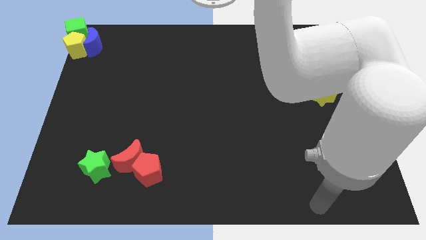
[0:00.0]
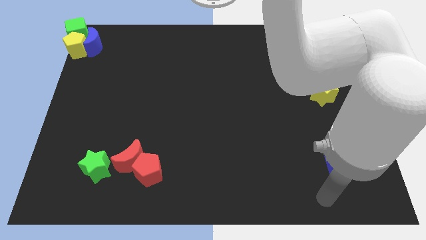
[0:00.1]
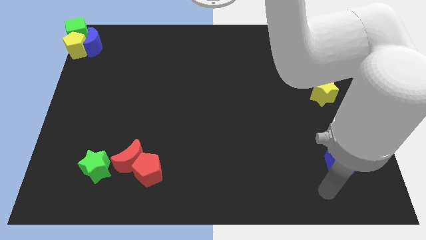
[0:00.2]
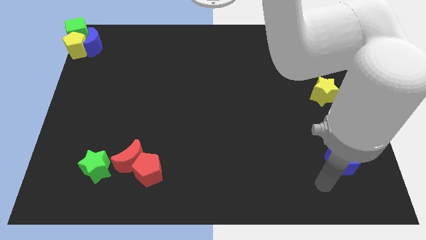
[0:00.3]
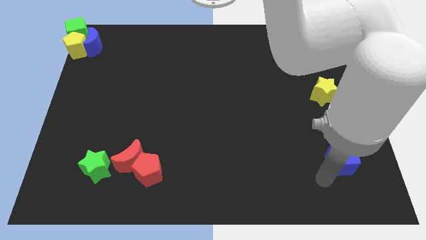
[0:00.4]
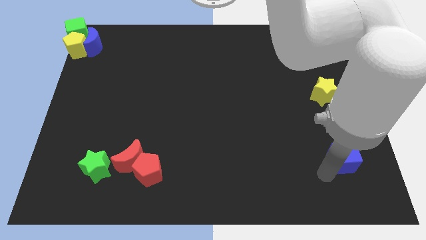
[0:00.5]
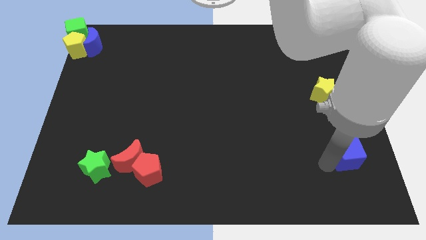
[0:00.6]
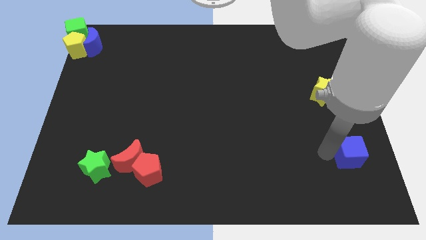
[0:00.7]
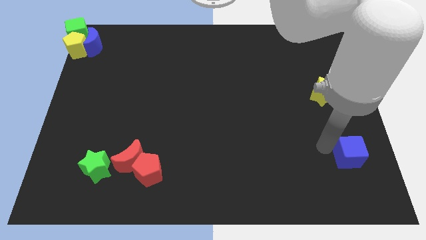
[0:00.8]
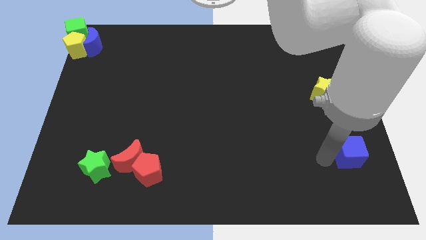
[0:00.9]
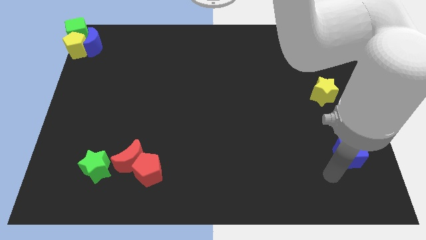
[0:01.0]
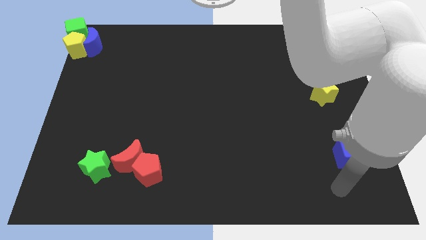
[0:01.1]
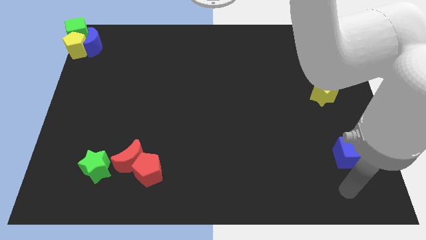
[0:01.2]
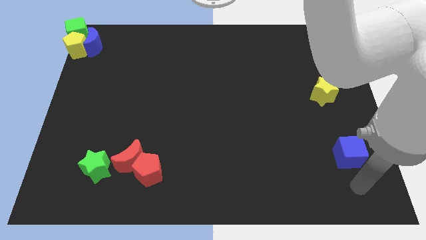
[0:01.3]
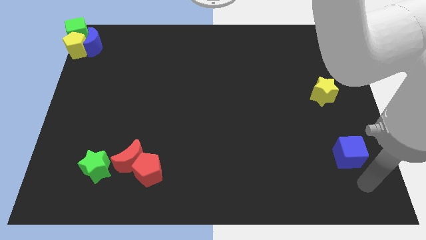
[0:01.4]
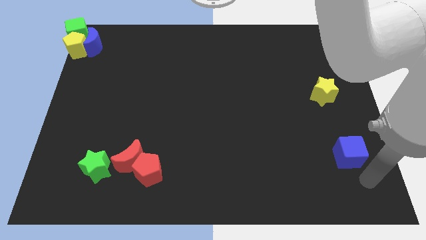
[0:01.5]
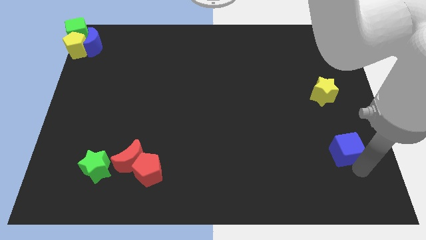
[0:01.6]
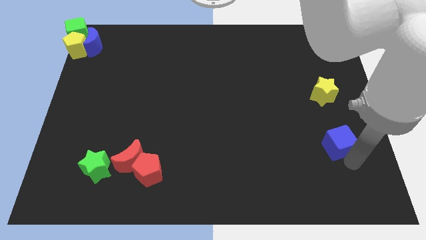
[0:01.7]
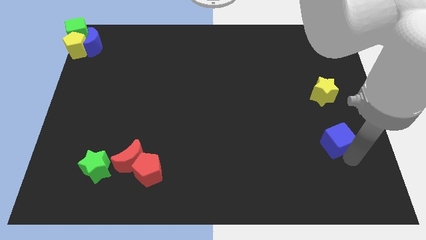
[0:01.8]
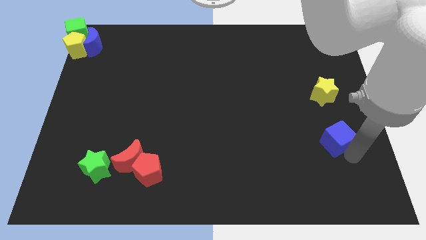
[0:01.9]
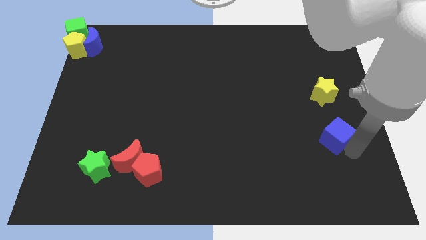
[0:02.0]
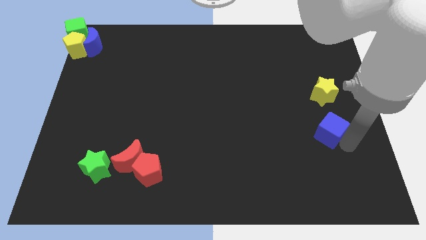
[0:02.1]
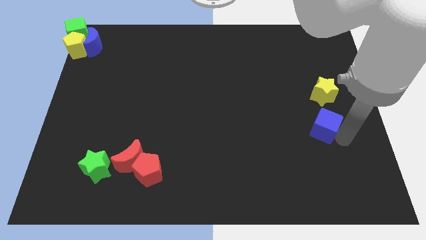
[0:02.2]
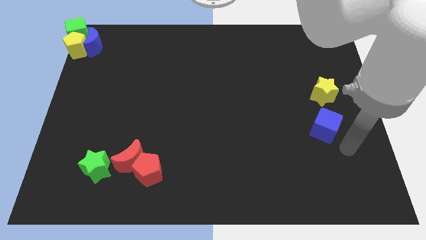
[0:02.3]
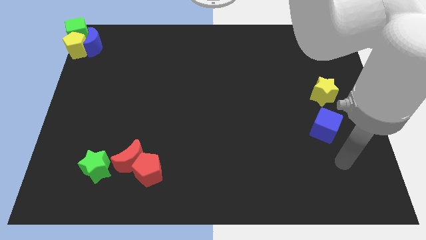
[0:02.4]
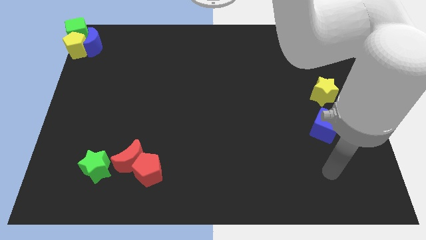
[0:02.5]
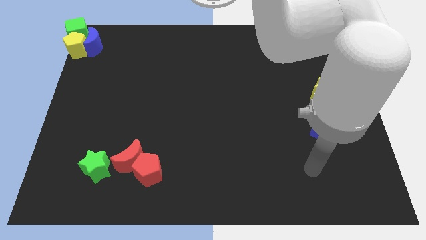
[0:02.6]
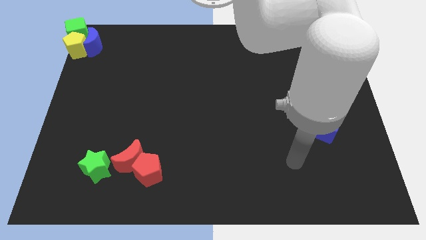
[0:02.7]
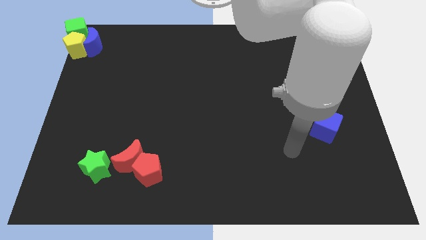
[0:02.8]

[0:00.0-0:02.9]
place blue cube below yellow star

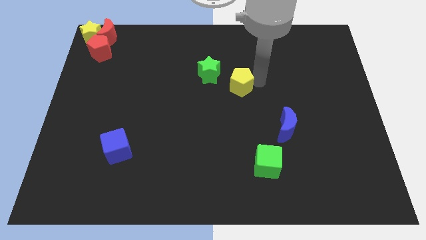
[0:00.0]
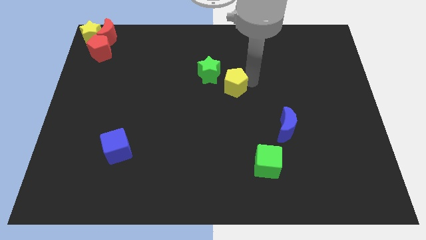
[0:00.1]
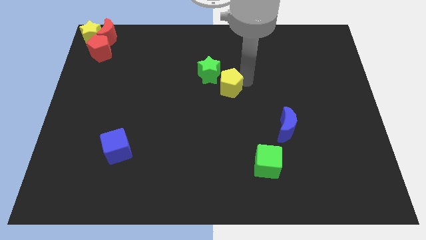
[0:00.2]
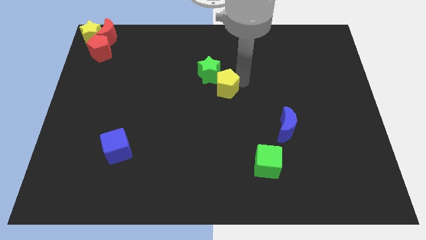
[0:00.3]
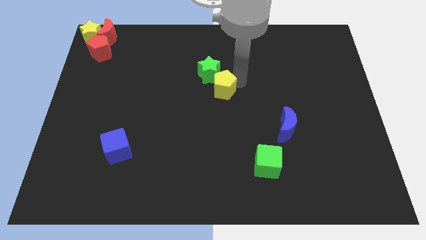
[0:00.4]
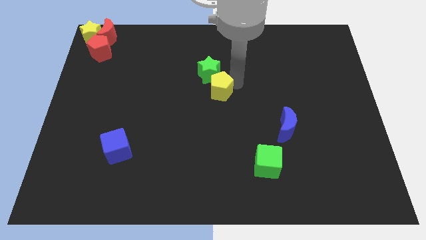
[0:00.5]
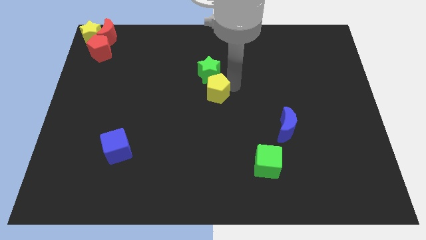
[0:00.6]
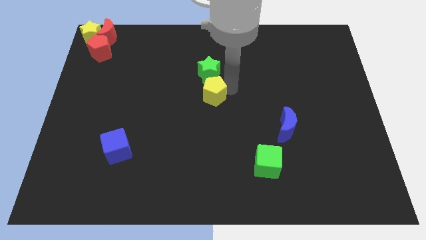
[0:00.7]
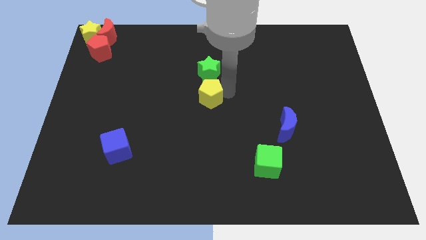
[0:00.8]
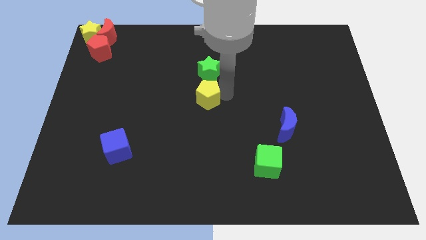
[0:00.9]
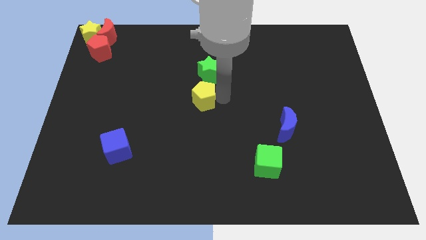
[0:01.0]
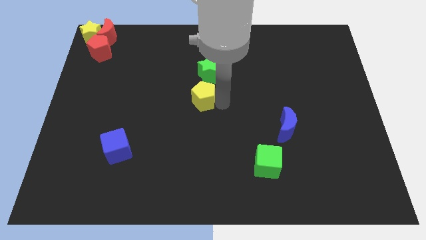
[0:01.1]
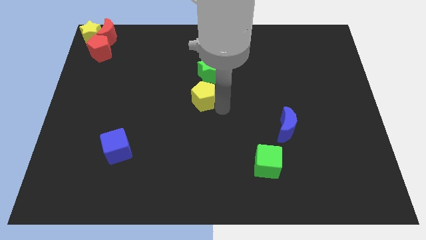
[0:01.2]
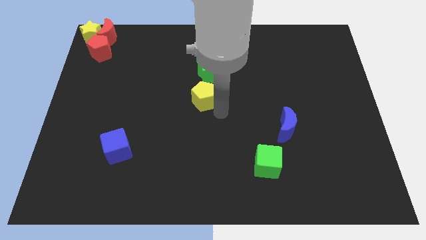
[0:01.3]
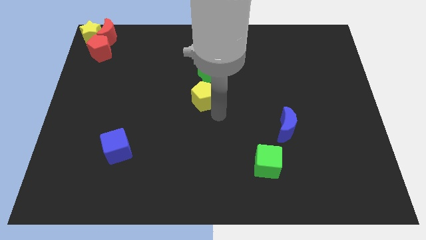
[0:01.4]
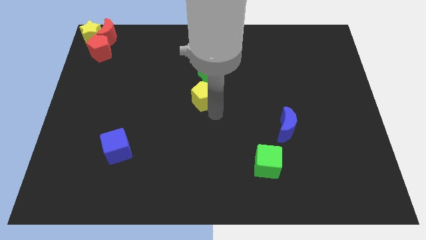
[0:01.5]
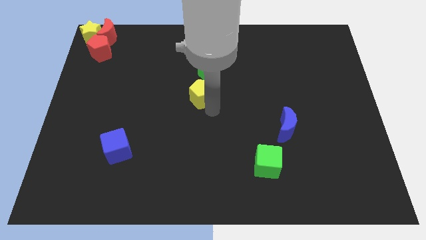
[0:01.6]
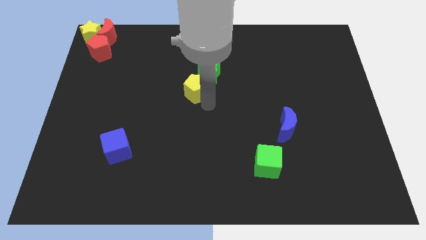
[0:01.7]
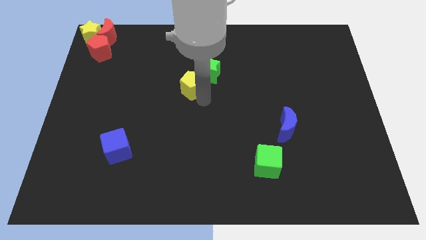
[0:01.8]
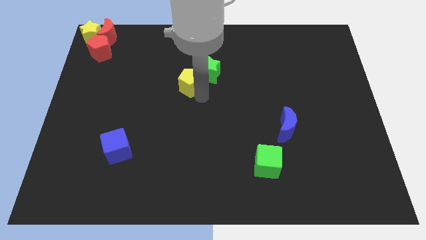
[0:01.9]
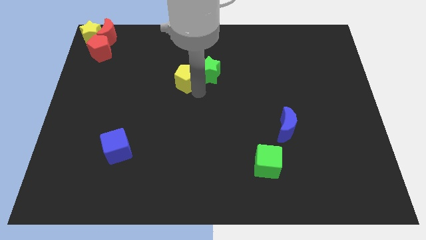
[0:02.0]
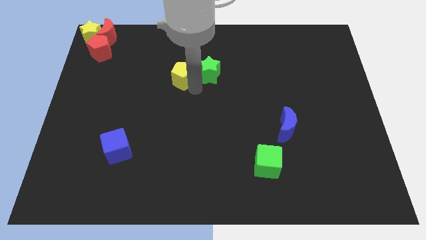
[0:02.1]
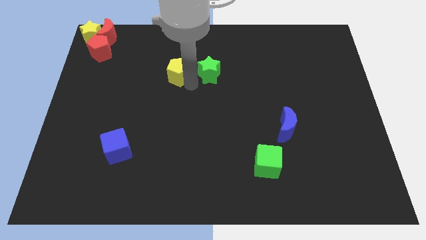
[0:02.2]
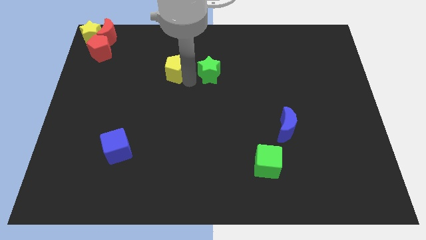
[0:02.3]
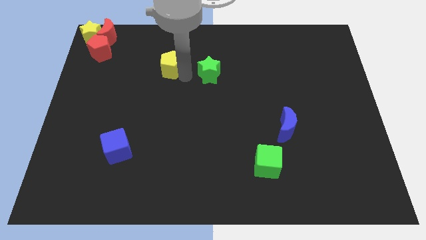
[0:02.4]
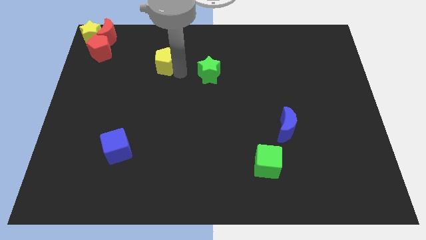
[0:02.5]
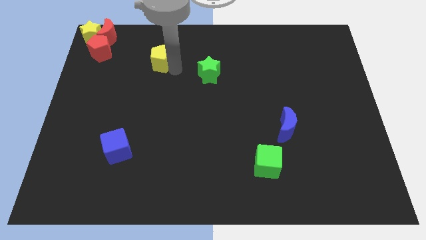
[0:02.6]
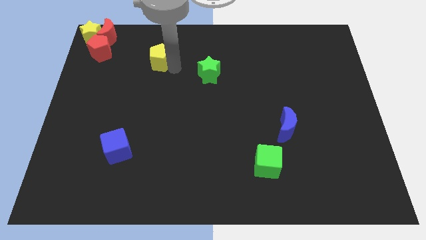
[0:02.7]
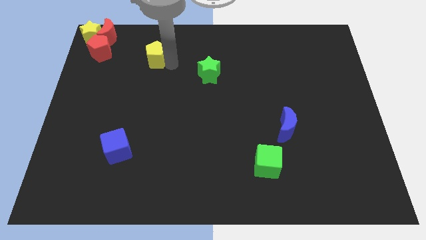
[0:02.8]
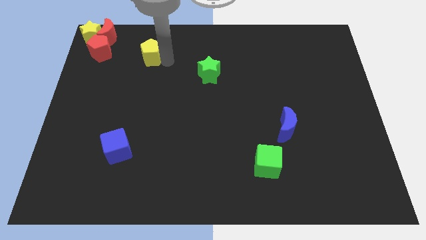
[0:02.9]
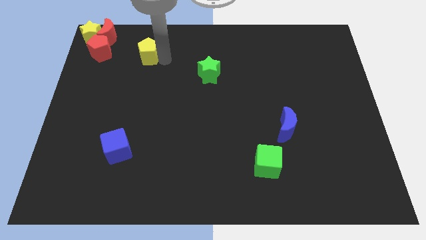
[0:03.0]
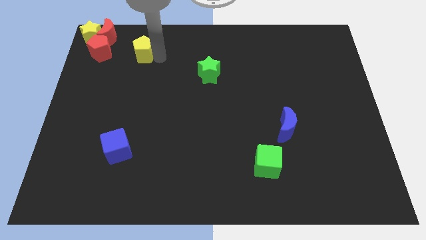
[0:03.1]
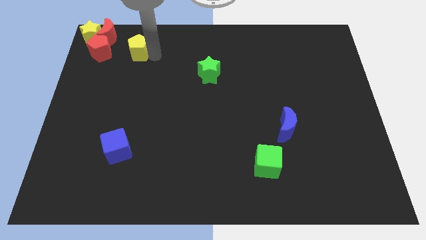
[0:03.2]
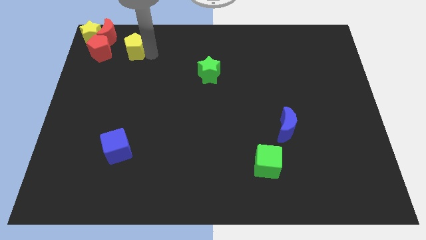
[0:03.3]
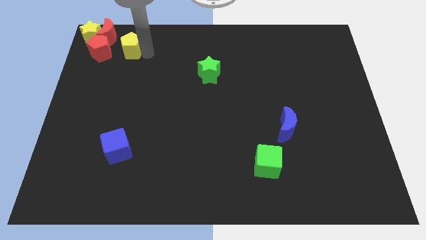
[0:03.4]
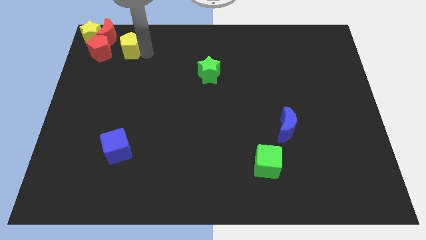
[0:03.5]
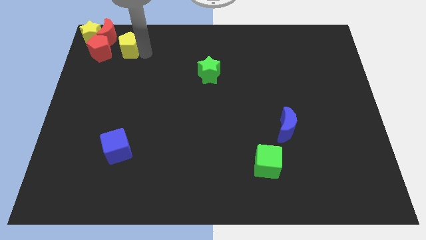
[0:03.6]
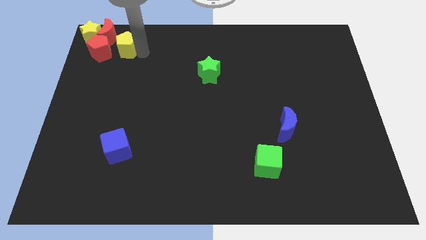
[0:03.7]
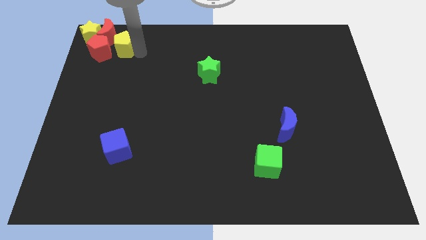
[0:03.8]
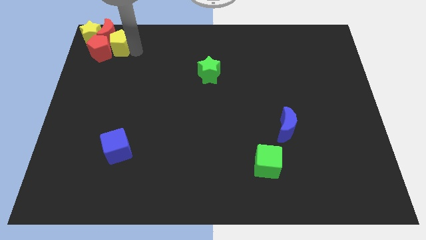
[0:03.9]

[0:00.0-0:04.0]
move the yellow pentagon towards the top left corner of the board

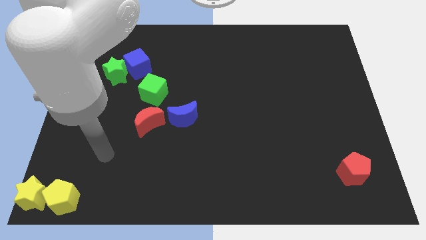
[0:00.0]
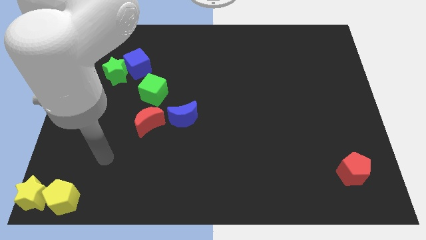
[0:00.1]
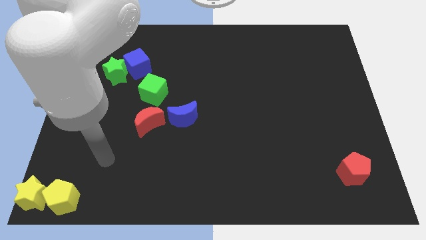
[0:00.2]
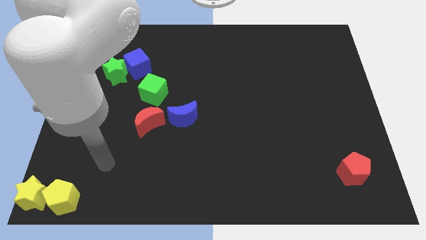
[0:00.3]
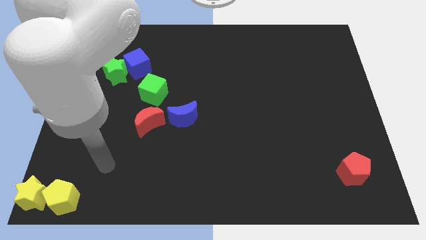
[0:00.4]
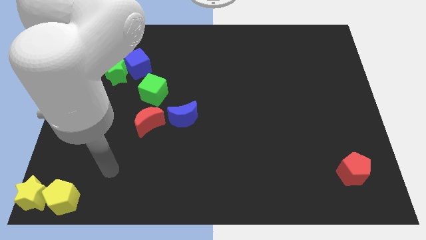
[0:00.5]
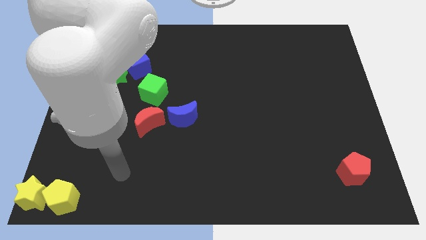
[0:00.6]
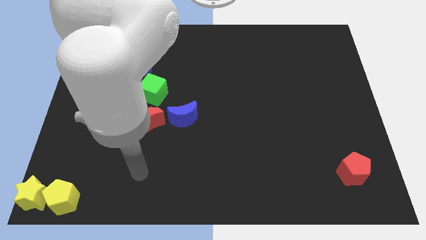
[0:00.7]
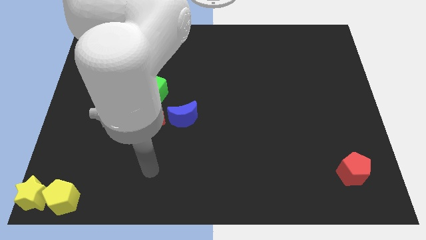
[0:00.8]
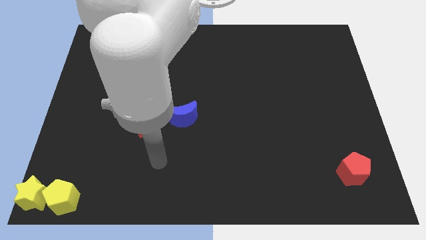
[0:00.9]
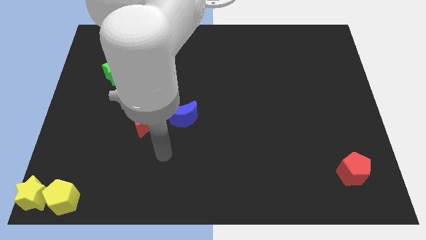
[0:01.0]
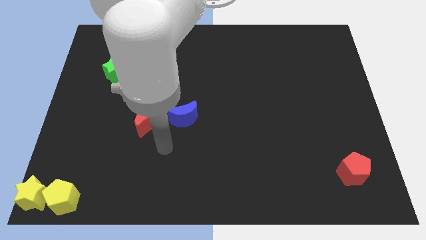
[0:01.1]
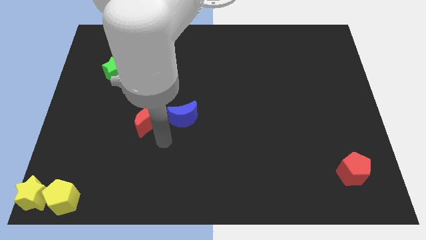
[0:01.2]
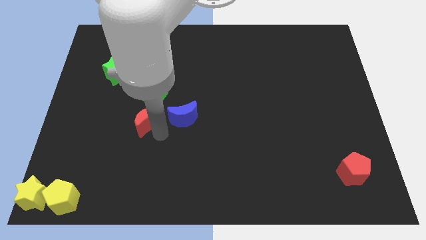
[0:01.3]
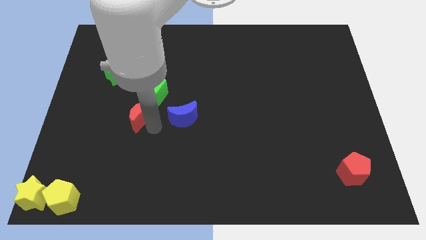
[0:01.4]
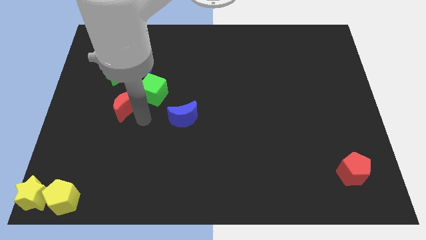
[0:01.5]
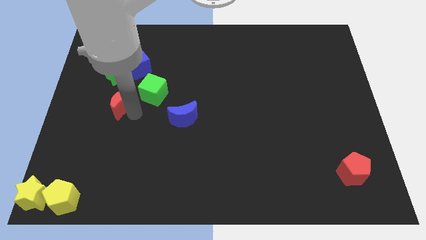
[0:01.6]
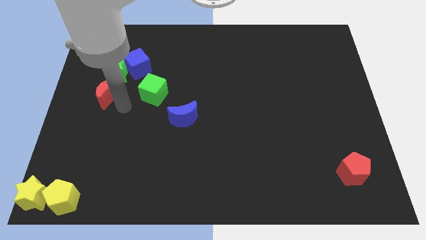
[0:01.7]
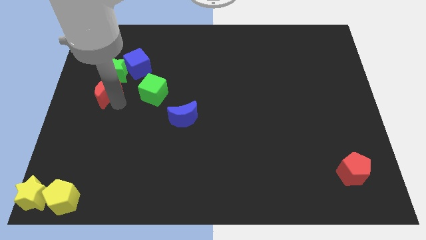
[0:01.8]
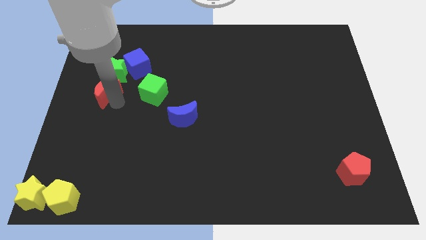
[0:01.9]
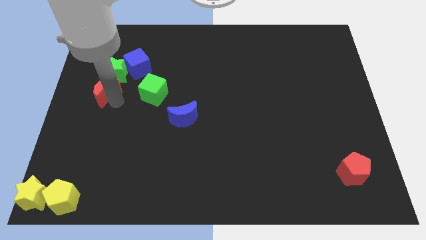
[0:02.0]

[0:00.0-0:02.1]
push the red moon at the bottom of the green star
